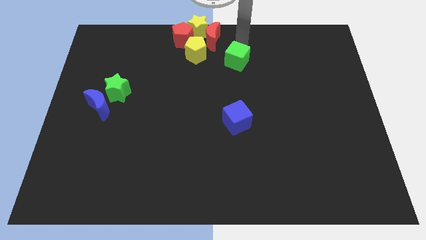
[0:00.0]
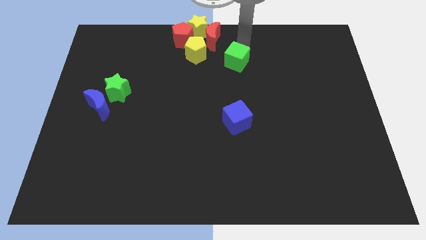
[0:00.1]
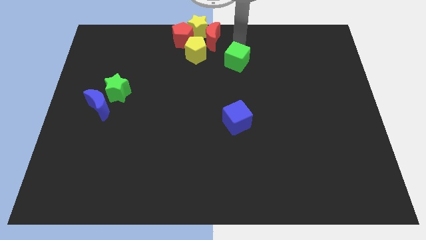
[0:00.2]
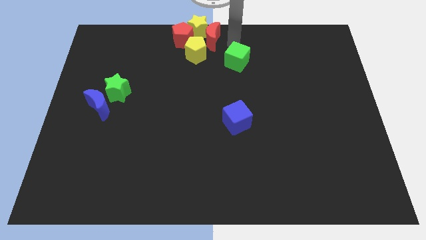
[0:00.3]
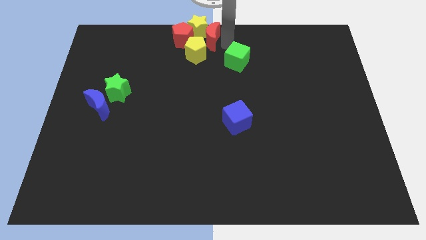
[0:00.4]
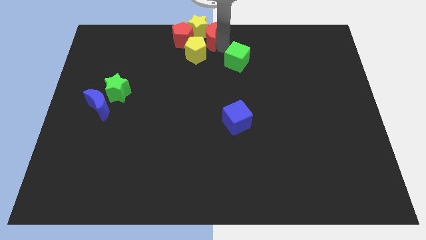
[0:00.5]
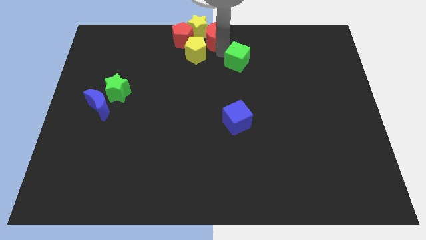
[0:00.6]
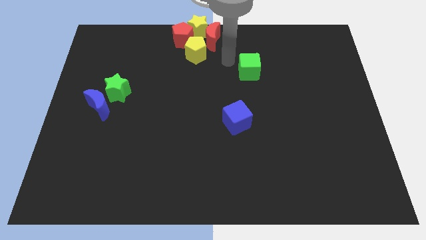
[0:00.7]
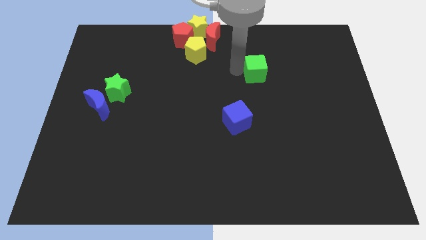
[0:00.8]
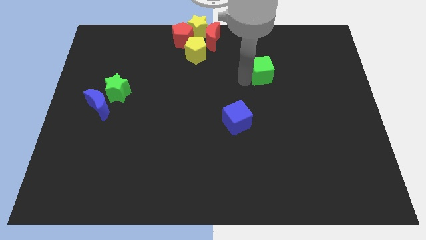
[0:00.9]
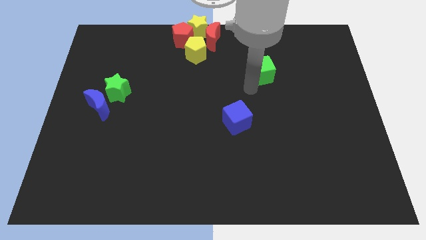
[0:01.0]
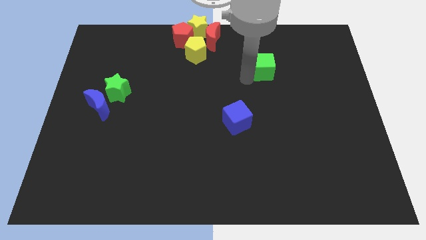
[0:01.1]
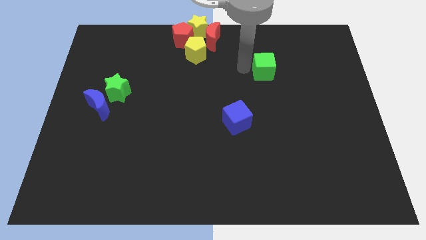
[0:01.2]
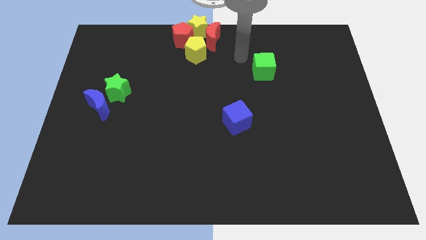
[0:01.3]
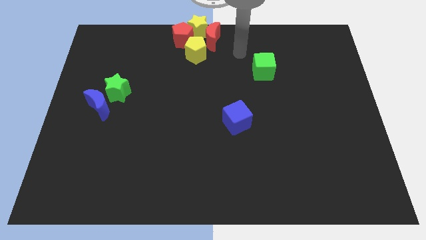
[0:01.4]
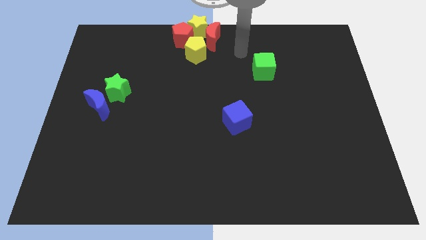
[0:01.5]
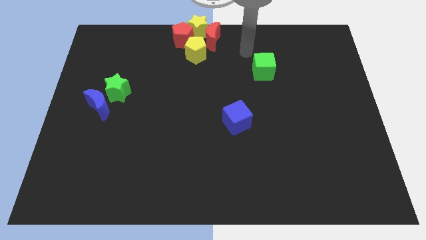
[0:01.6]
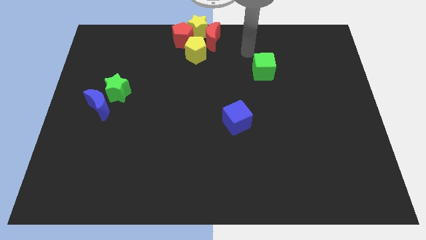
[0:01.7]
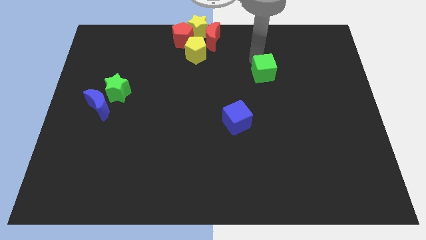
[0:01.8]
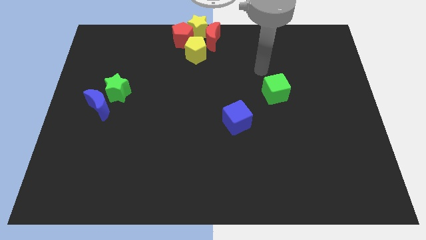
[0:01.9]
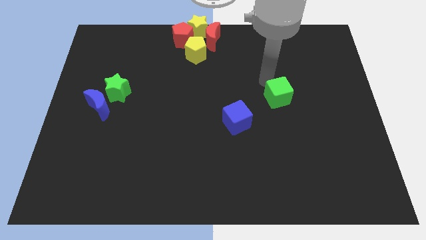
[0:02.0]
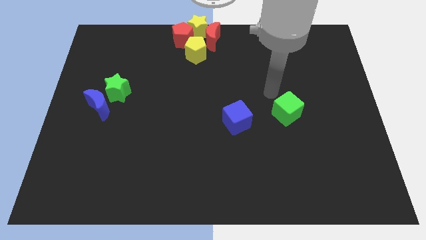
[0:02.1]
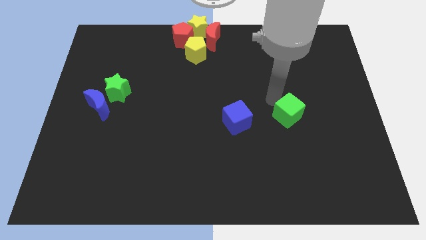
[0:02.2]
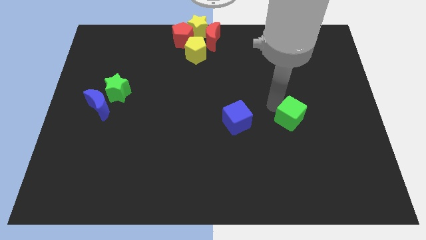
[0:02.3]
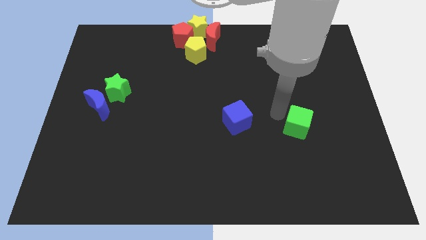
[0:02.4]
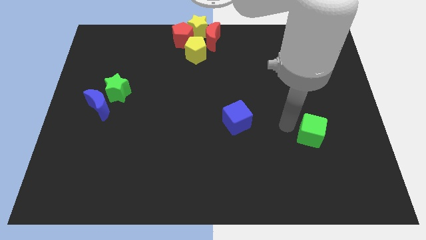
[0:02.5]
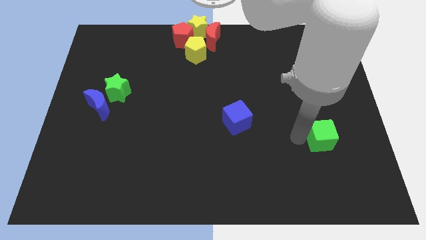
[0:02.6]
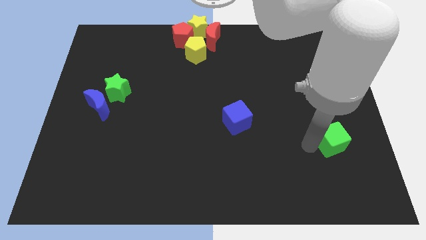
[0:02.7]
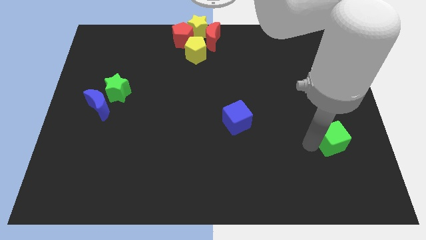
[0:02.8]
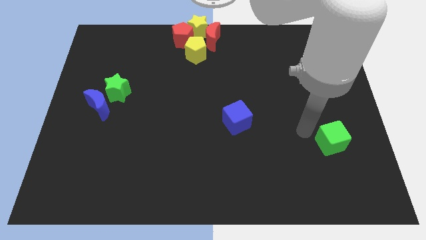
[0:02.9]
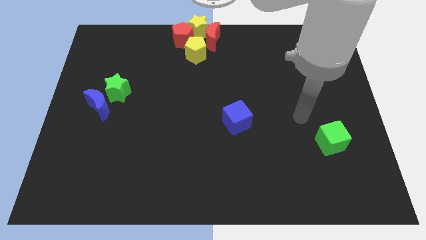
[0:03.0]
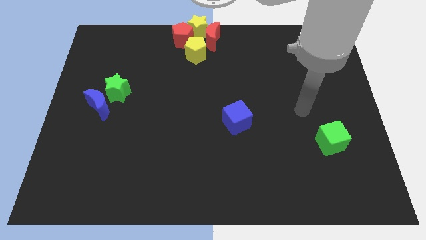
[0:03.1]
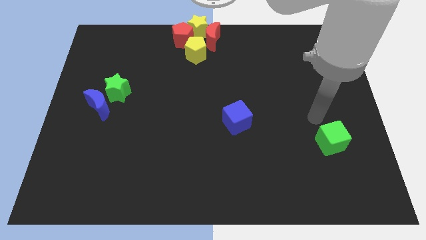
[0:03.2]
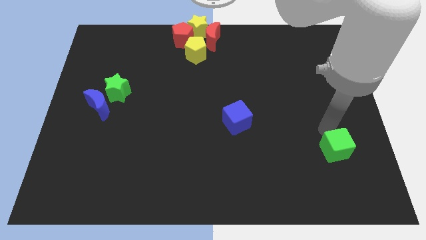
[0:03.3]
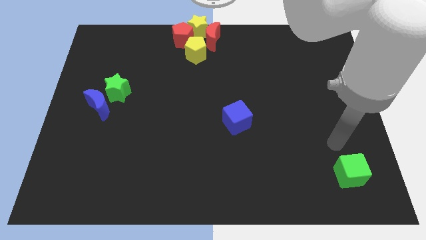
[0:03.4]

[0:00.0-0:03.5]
push the green cube diagonally towards the bottom right

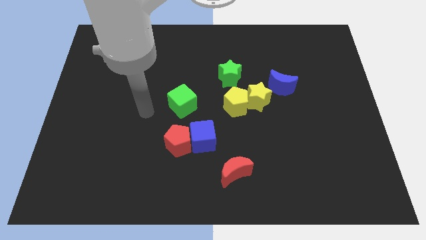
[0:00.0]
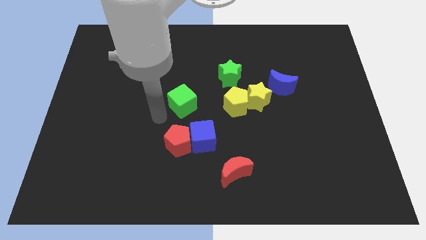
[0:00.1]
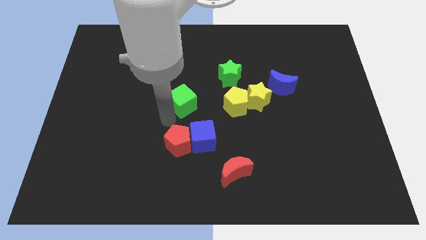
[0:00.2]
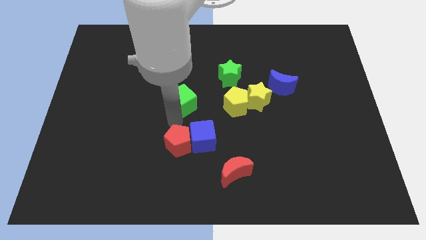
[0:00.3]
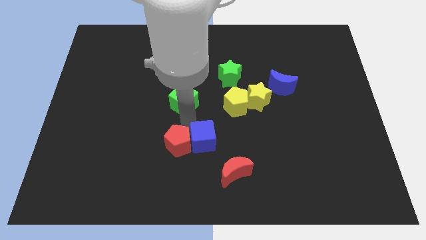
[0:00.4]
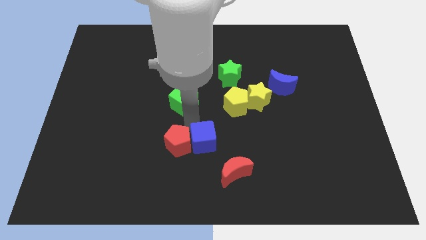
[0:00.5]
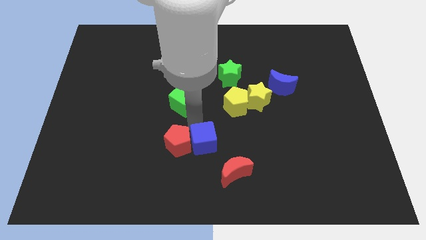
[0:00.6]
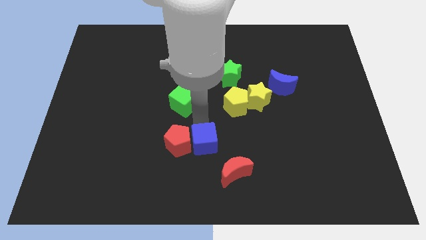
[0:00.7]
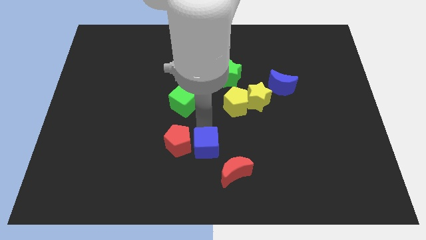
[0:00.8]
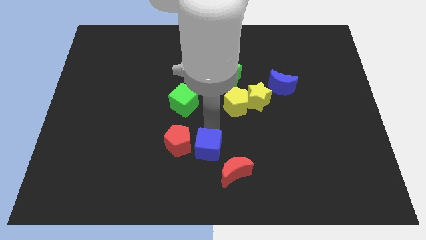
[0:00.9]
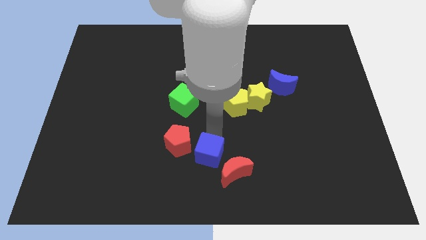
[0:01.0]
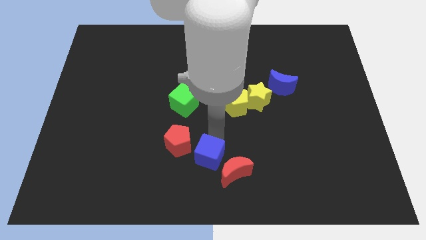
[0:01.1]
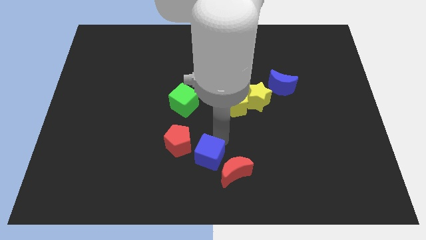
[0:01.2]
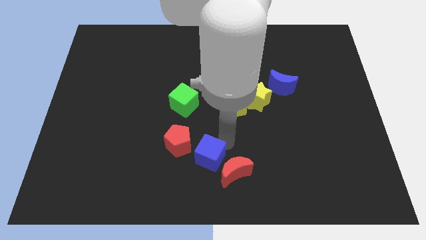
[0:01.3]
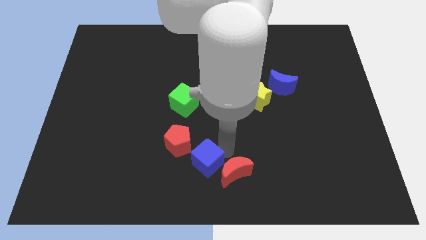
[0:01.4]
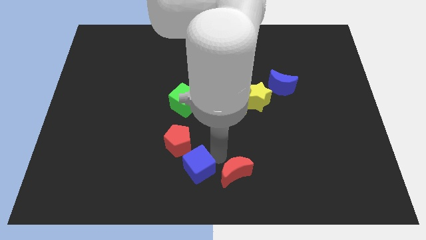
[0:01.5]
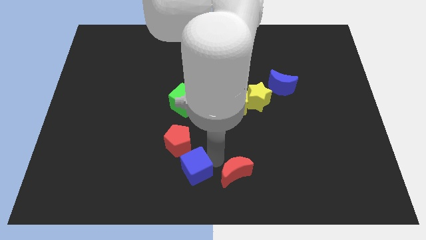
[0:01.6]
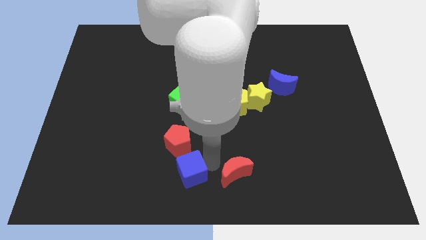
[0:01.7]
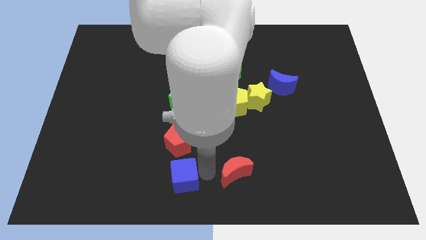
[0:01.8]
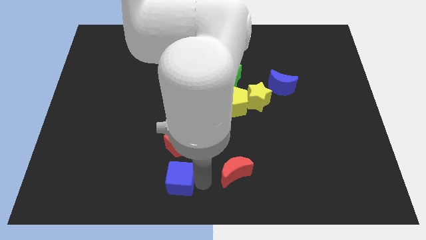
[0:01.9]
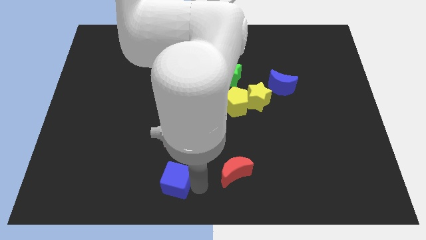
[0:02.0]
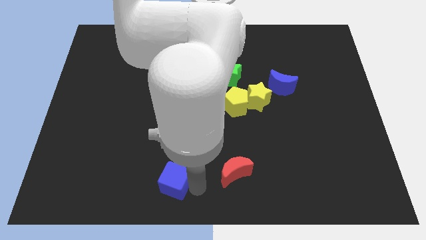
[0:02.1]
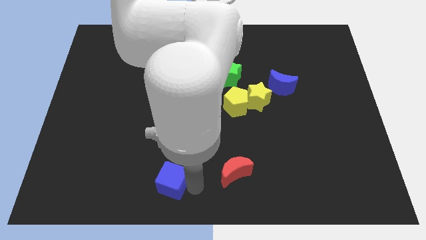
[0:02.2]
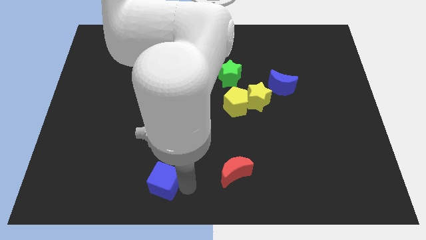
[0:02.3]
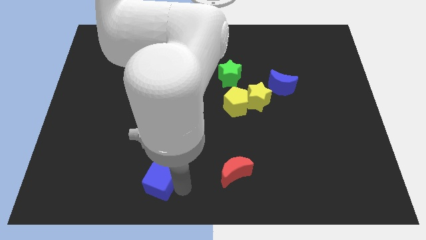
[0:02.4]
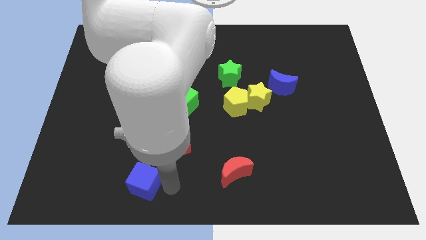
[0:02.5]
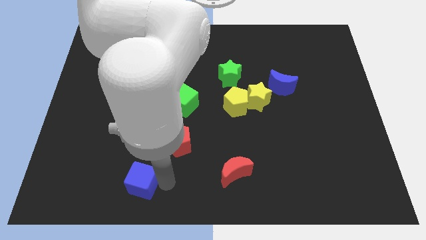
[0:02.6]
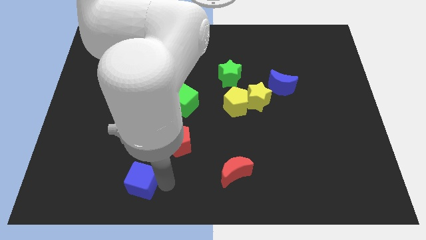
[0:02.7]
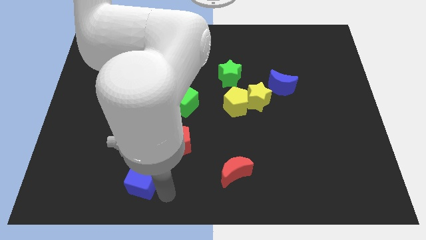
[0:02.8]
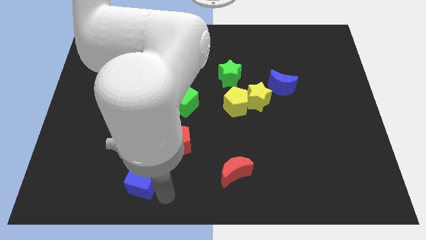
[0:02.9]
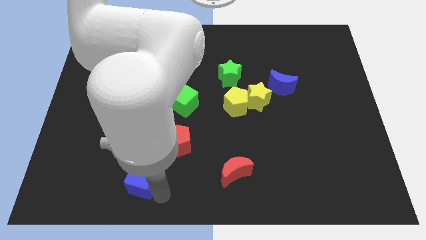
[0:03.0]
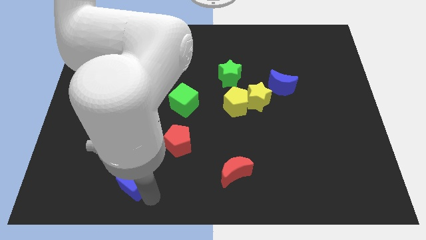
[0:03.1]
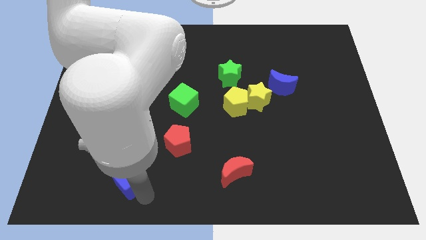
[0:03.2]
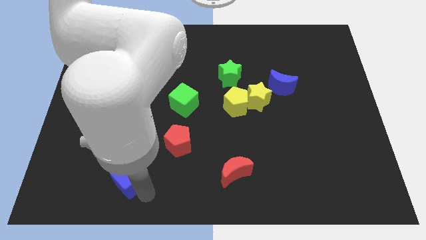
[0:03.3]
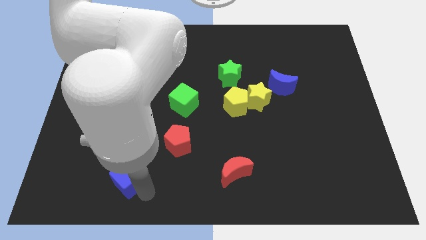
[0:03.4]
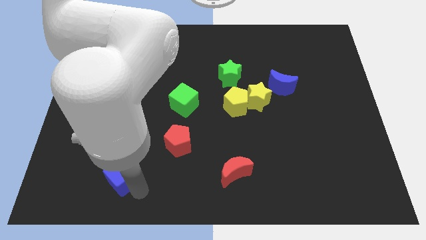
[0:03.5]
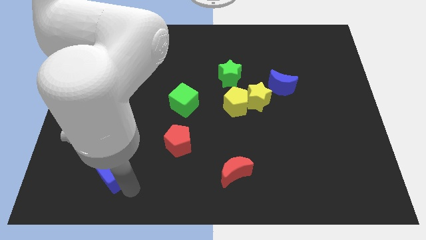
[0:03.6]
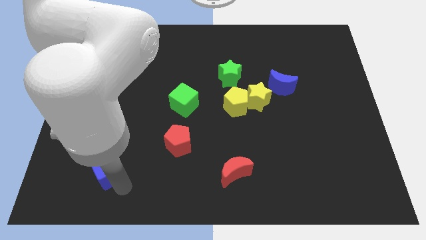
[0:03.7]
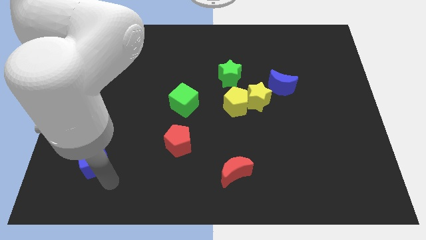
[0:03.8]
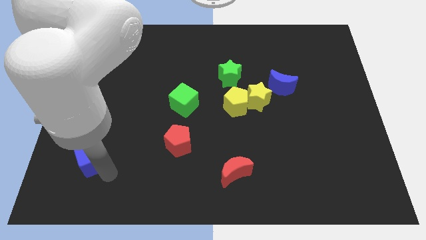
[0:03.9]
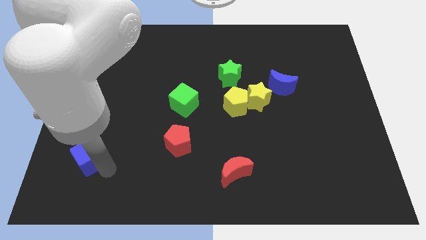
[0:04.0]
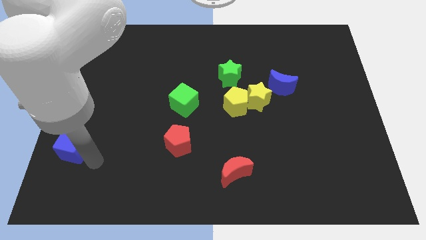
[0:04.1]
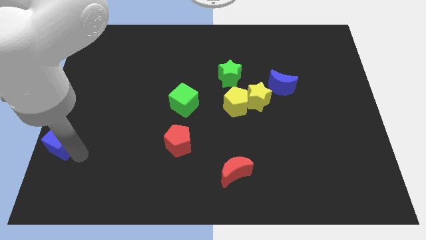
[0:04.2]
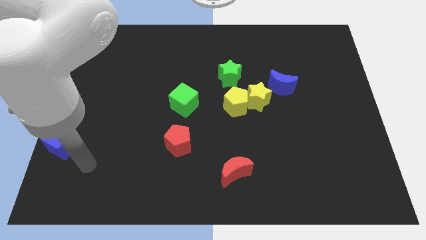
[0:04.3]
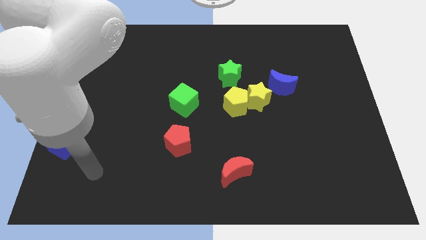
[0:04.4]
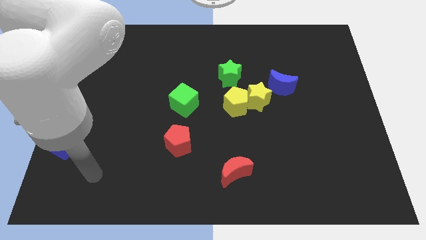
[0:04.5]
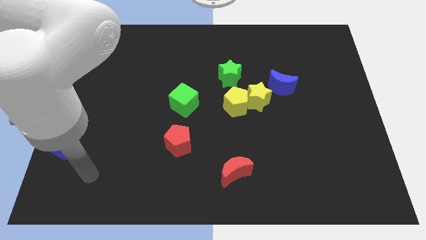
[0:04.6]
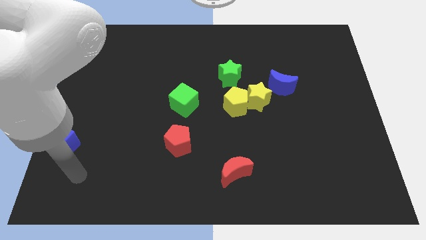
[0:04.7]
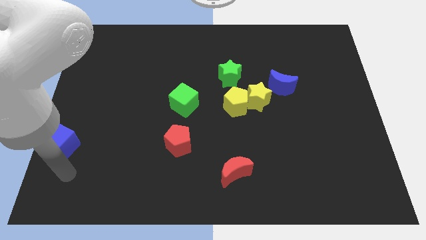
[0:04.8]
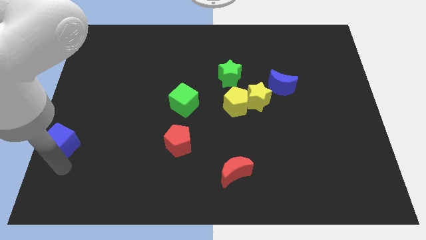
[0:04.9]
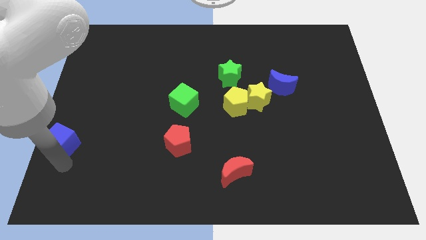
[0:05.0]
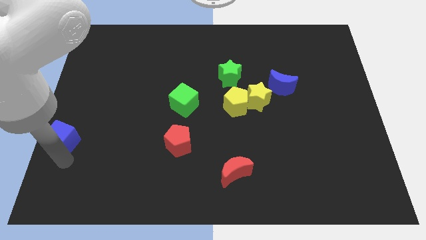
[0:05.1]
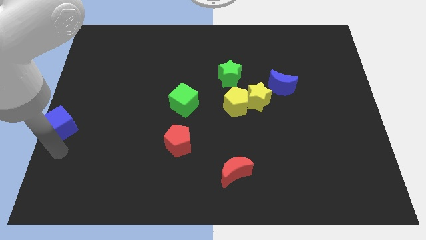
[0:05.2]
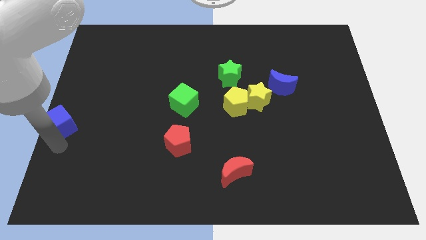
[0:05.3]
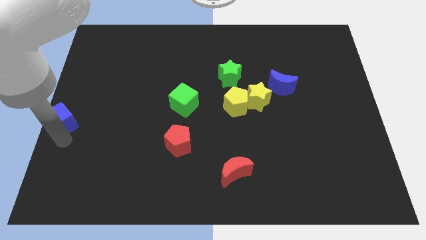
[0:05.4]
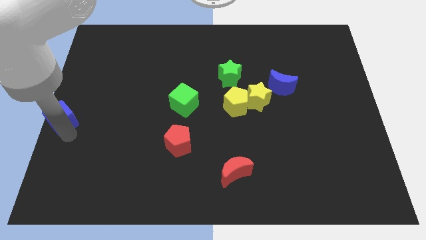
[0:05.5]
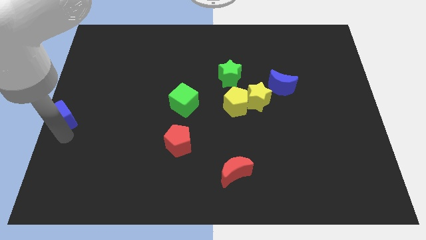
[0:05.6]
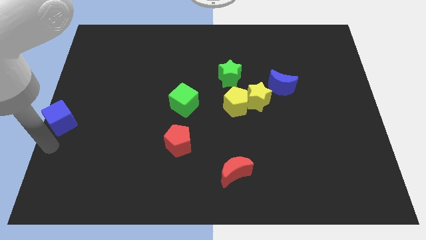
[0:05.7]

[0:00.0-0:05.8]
move the blue cube towards the center left of the board
